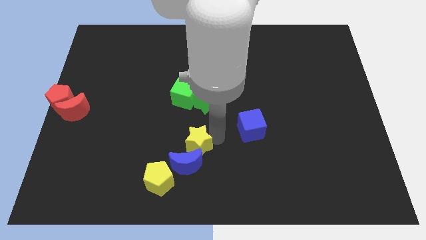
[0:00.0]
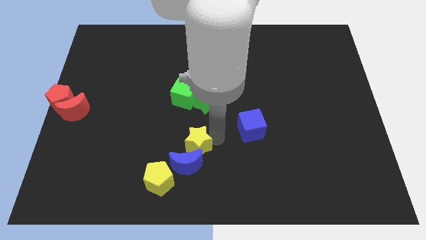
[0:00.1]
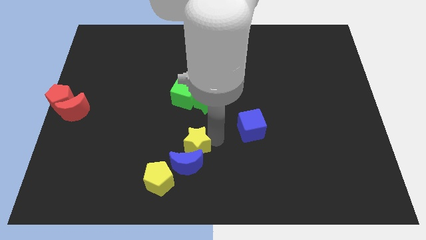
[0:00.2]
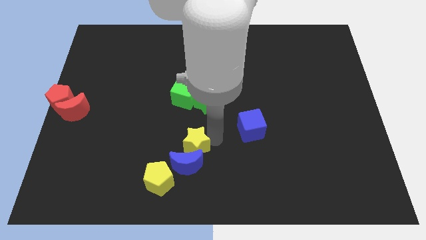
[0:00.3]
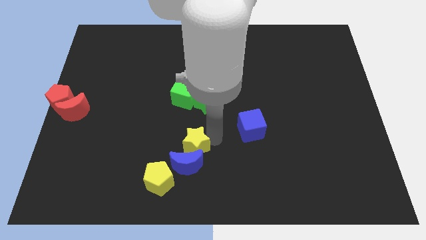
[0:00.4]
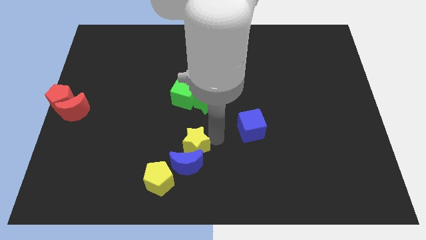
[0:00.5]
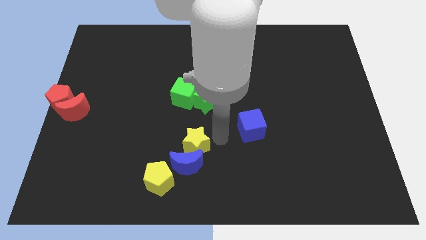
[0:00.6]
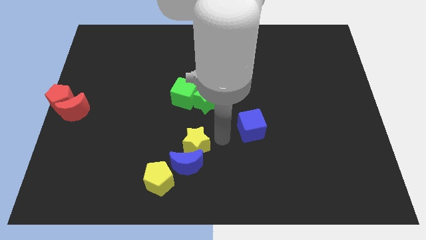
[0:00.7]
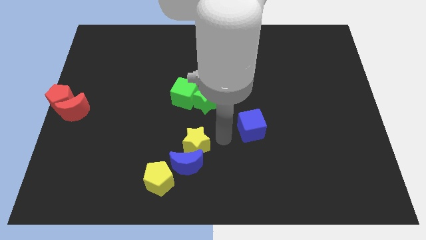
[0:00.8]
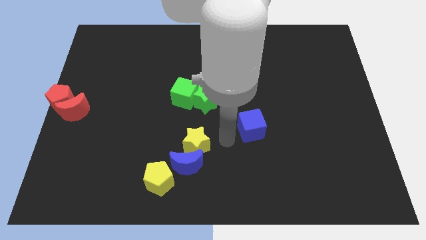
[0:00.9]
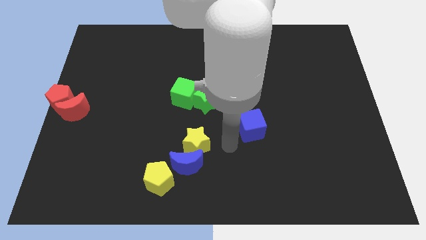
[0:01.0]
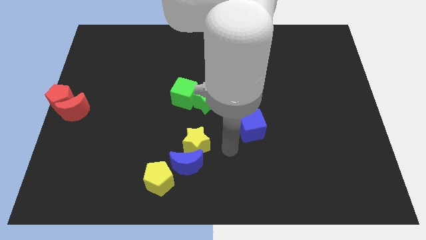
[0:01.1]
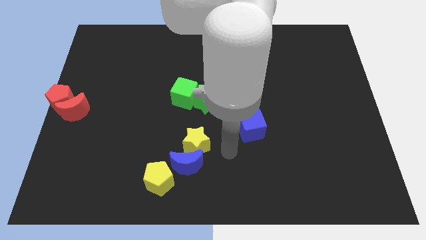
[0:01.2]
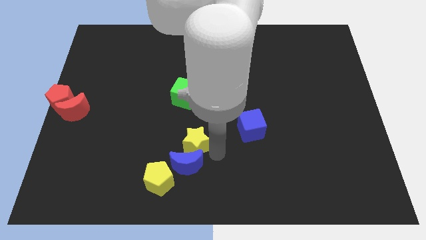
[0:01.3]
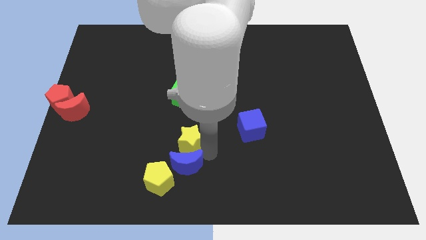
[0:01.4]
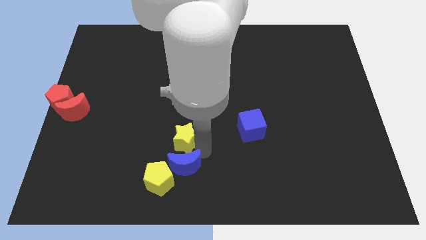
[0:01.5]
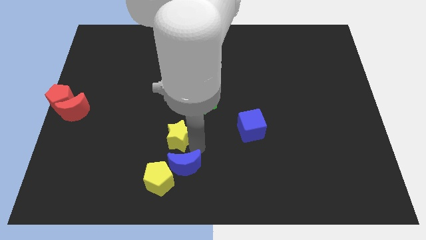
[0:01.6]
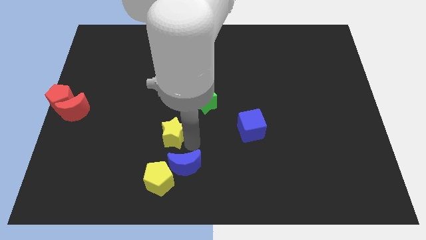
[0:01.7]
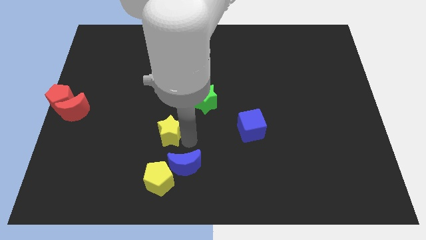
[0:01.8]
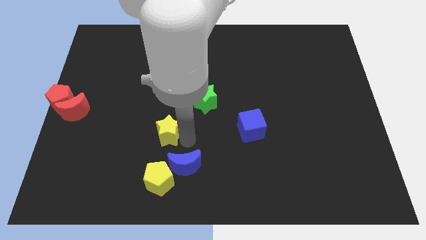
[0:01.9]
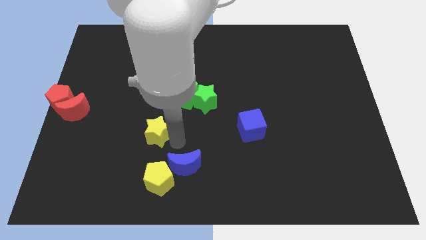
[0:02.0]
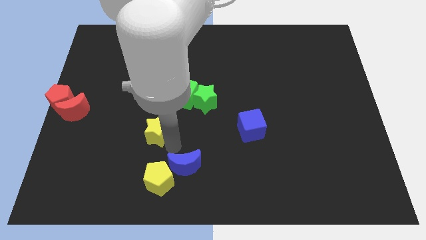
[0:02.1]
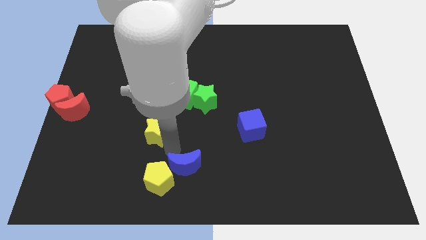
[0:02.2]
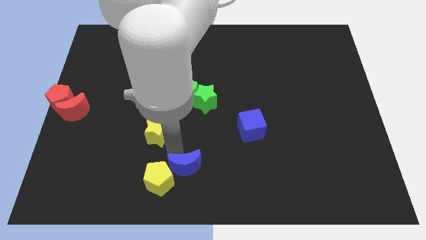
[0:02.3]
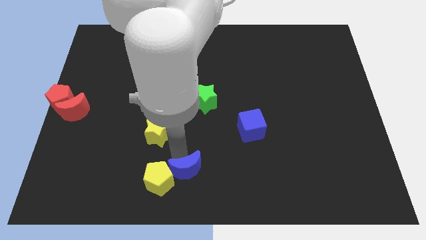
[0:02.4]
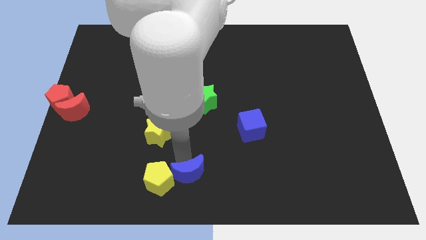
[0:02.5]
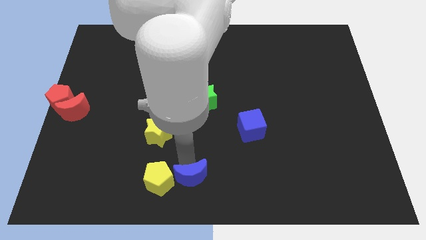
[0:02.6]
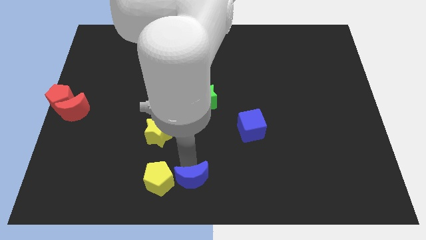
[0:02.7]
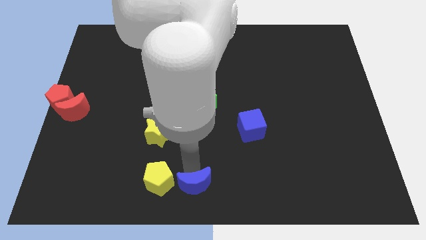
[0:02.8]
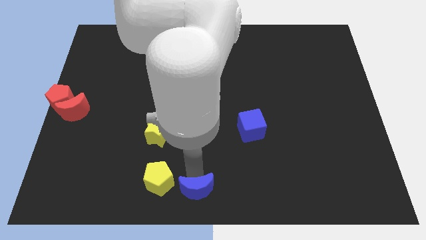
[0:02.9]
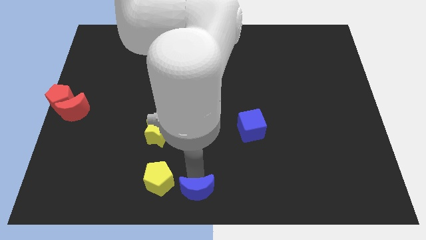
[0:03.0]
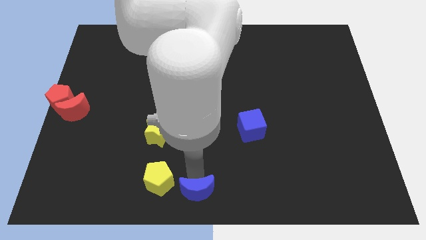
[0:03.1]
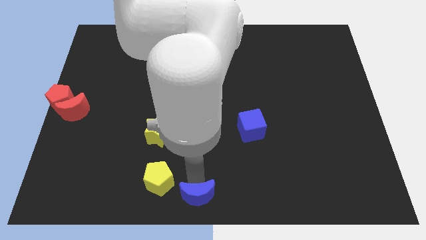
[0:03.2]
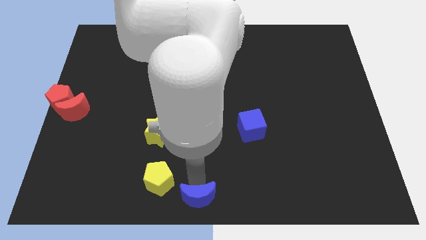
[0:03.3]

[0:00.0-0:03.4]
push the blue moon to the bottom center of the board

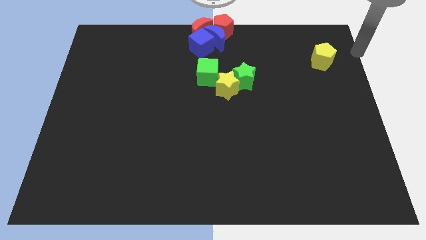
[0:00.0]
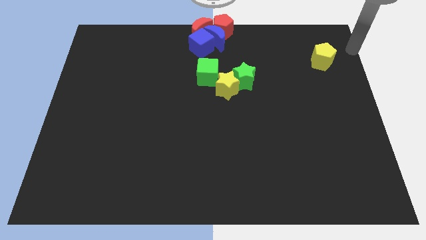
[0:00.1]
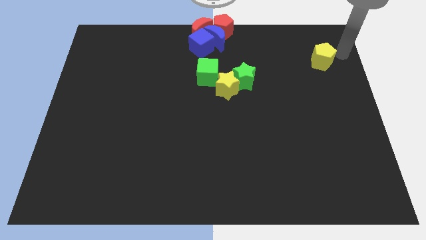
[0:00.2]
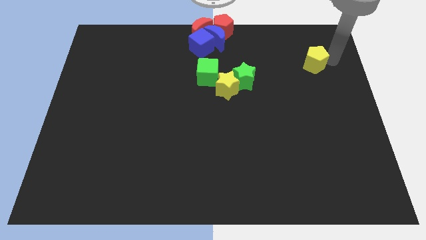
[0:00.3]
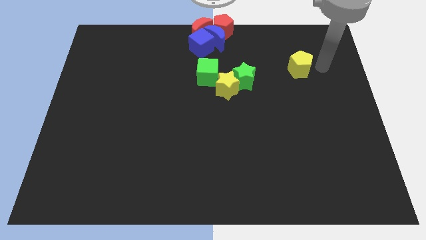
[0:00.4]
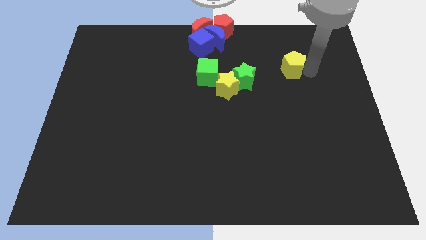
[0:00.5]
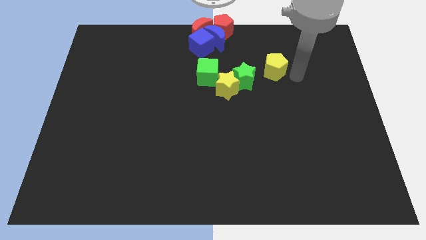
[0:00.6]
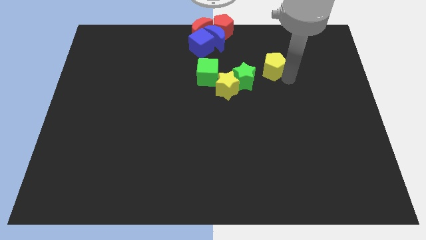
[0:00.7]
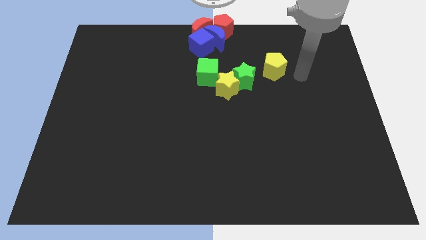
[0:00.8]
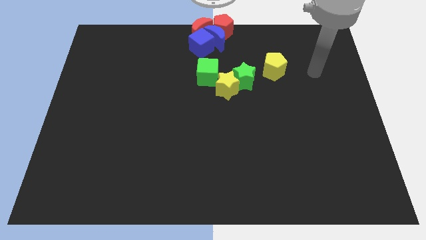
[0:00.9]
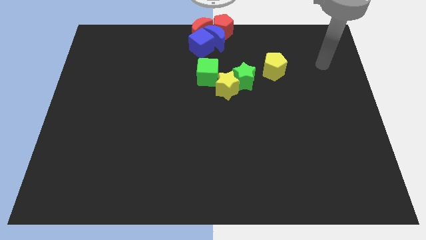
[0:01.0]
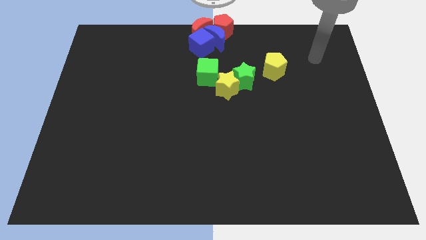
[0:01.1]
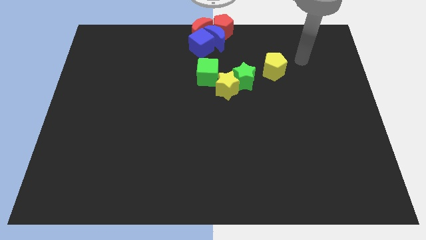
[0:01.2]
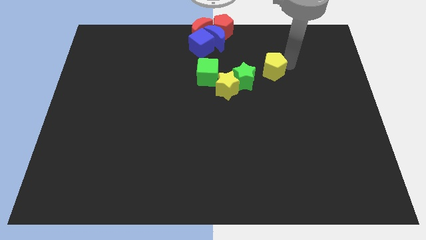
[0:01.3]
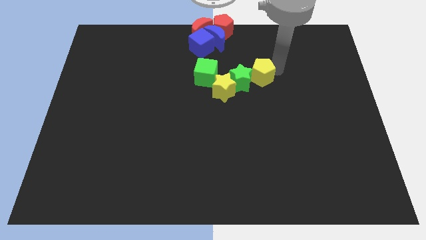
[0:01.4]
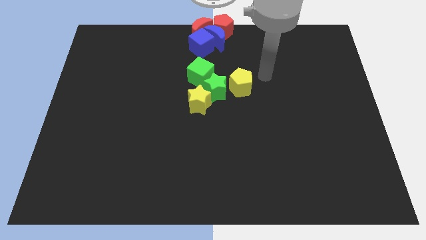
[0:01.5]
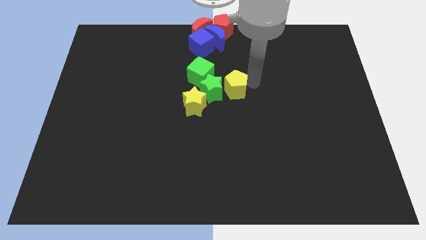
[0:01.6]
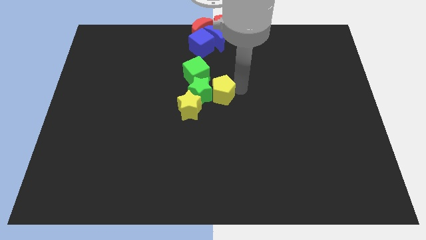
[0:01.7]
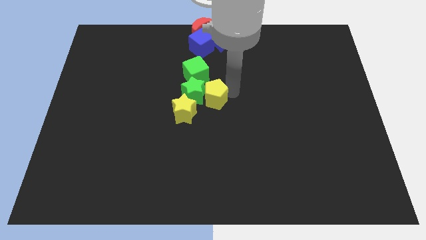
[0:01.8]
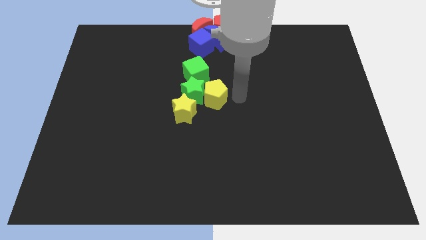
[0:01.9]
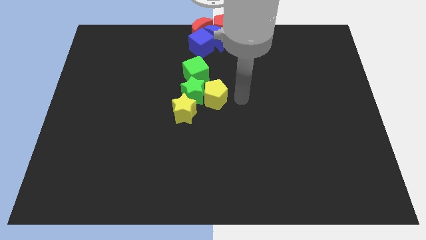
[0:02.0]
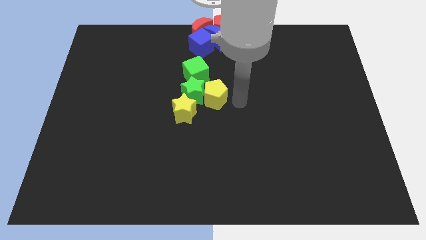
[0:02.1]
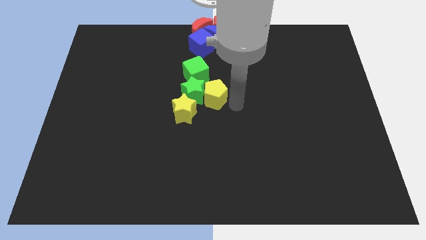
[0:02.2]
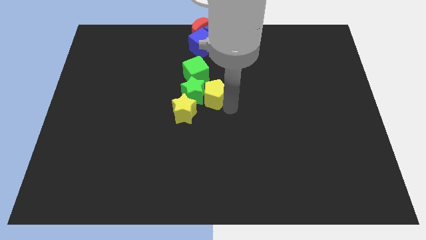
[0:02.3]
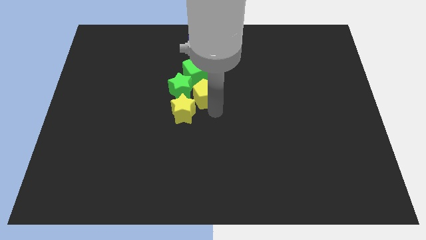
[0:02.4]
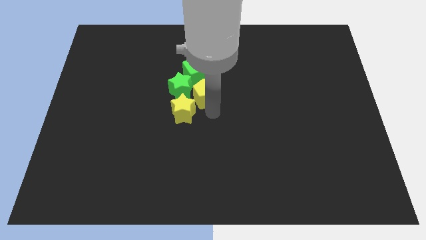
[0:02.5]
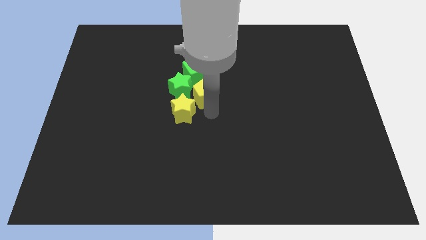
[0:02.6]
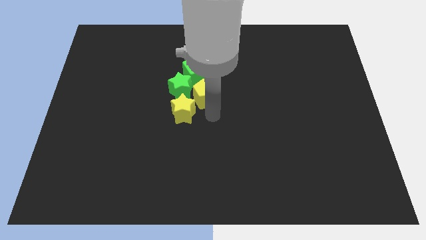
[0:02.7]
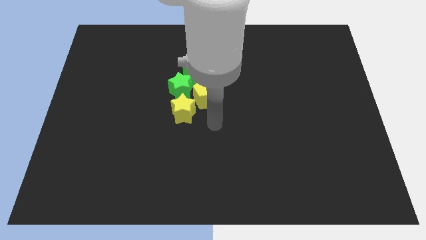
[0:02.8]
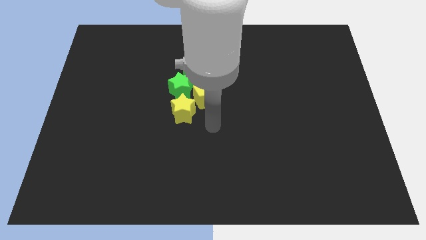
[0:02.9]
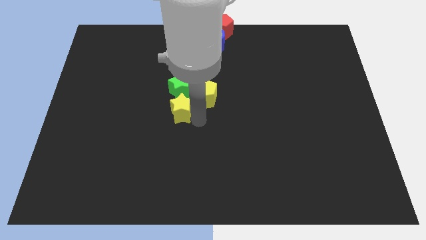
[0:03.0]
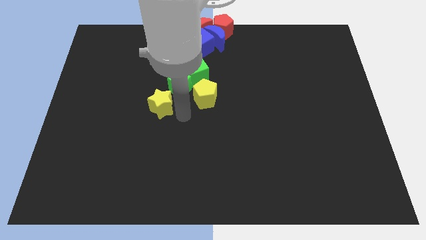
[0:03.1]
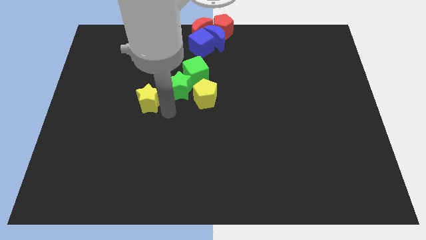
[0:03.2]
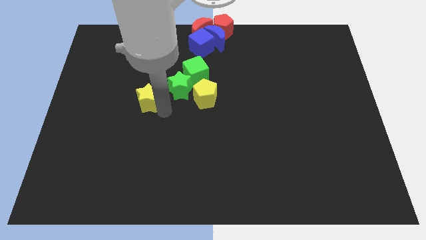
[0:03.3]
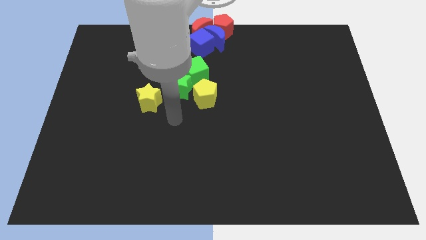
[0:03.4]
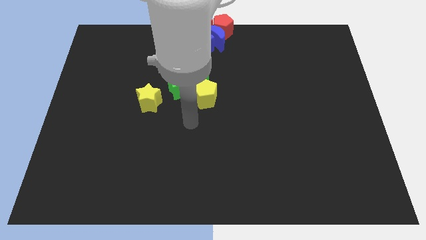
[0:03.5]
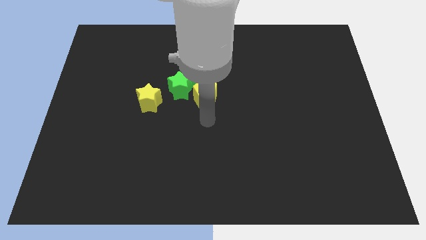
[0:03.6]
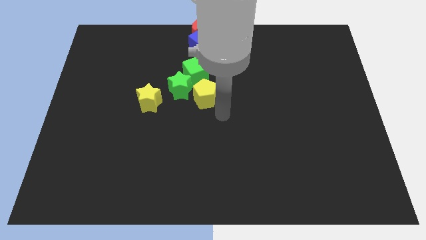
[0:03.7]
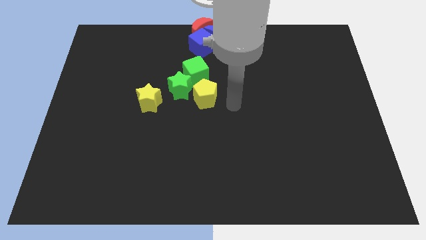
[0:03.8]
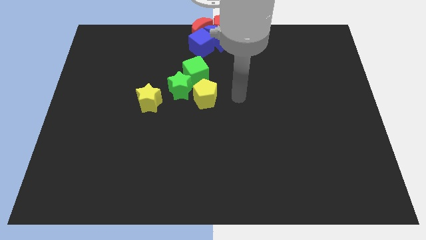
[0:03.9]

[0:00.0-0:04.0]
push the yellow pentagon into the green star and green cube

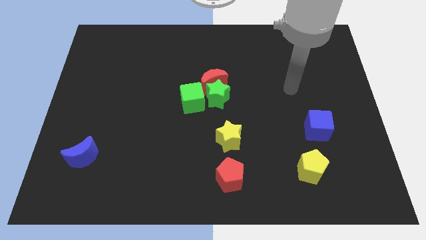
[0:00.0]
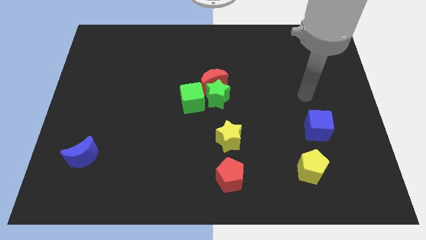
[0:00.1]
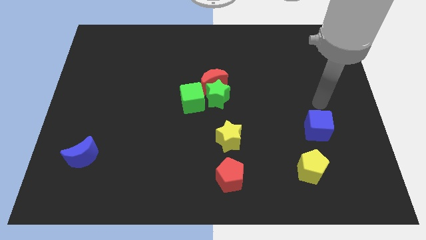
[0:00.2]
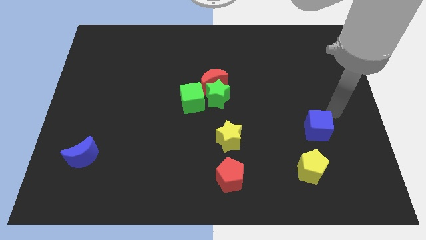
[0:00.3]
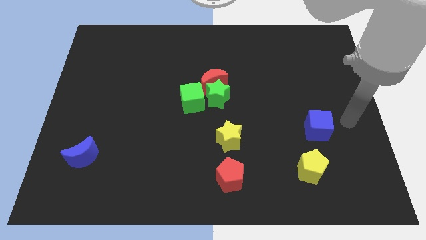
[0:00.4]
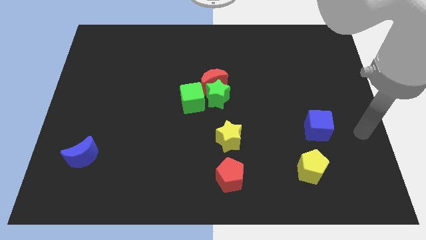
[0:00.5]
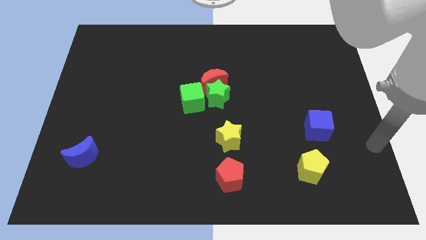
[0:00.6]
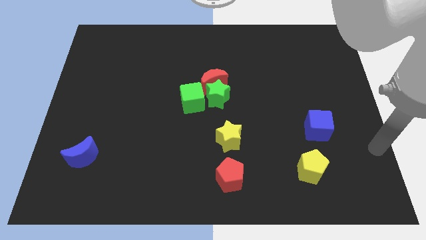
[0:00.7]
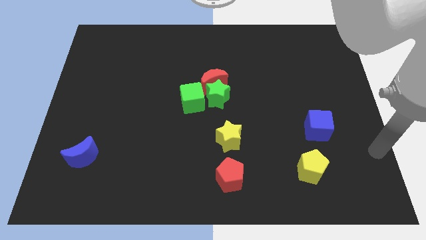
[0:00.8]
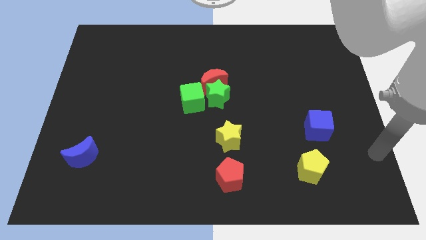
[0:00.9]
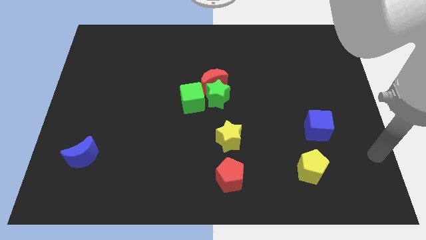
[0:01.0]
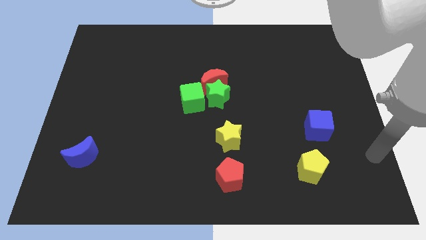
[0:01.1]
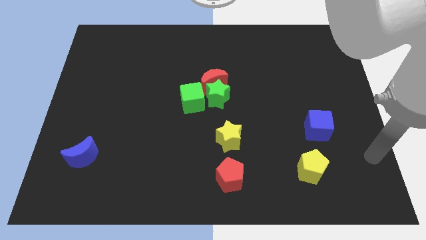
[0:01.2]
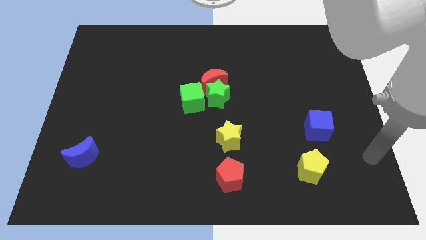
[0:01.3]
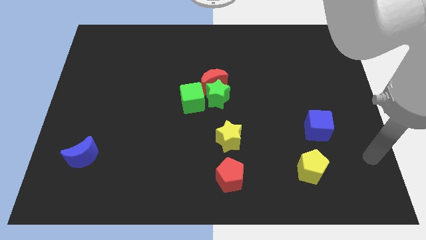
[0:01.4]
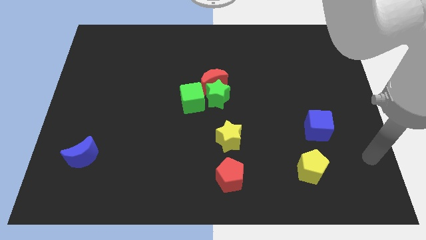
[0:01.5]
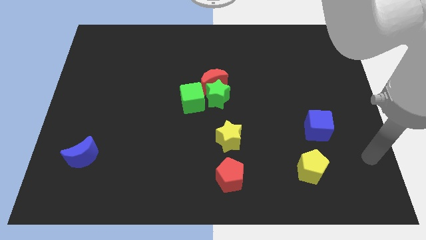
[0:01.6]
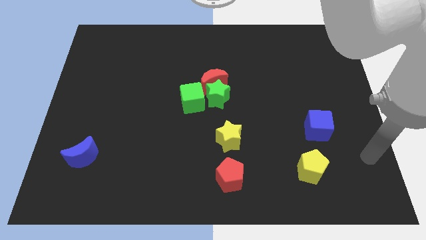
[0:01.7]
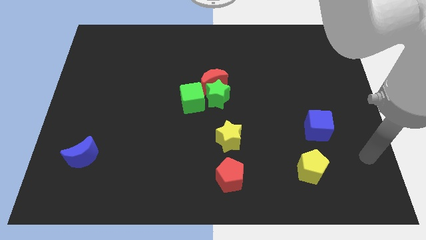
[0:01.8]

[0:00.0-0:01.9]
move the arm towards the bottom right of the blue cube
